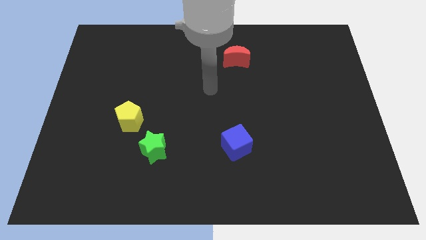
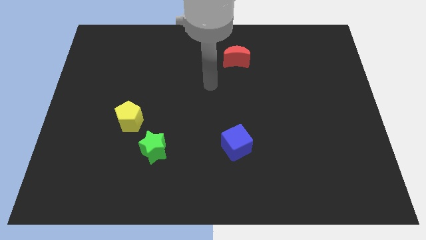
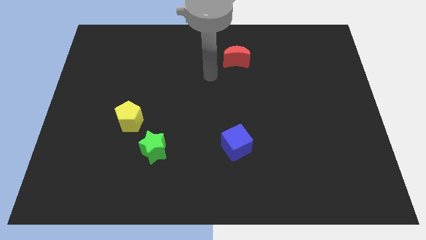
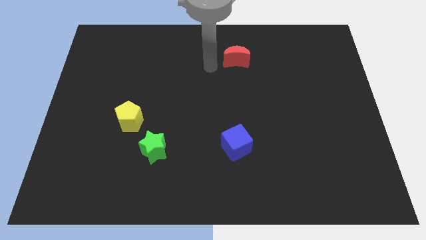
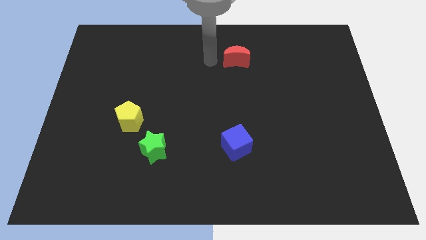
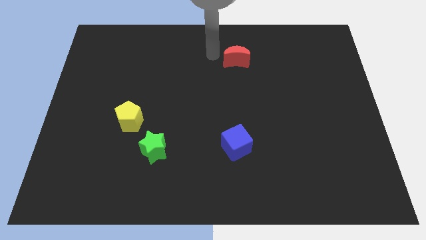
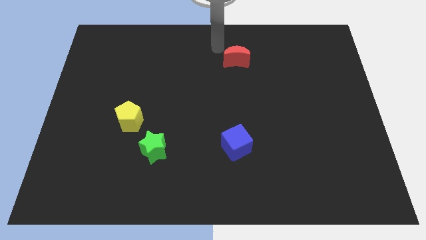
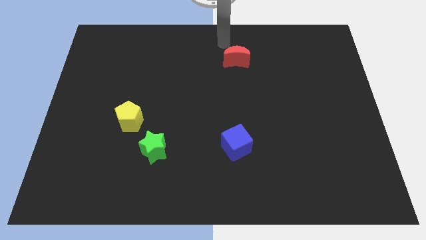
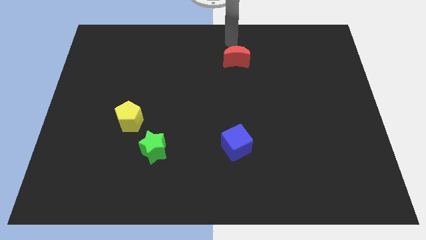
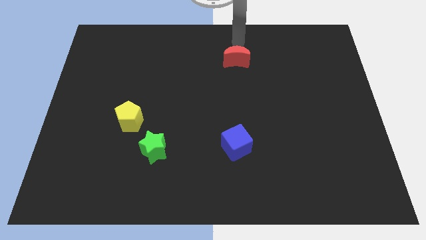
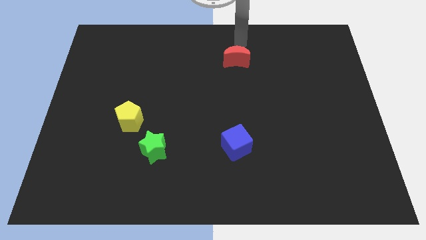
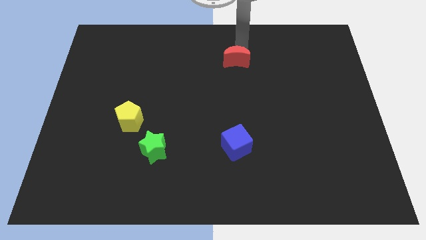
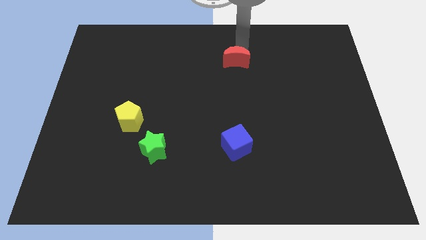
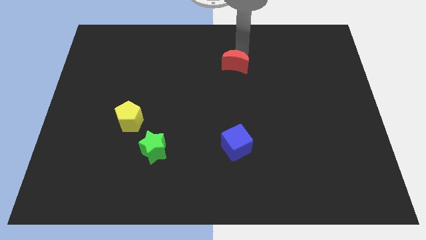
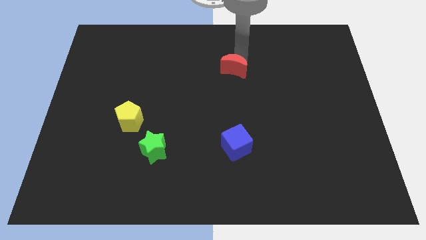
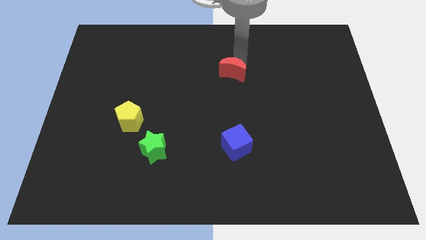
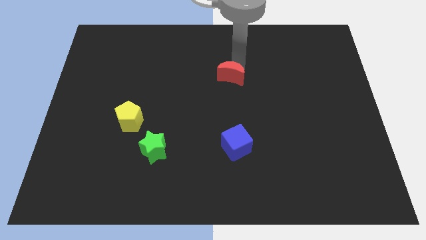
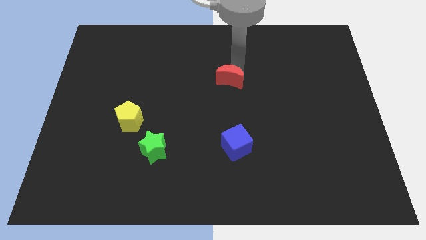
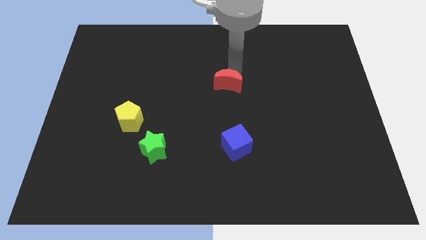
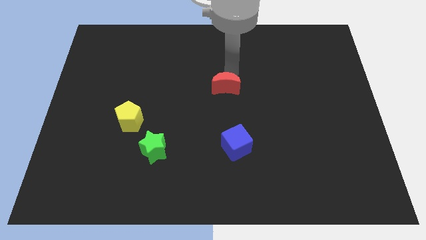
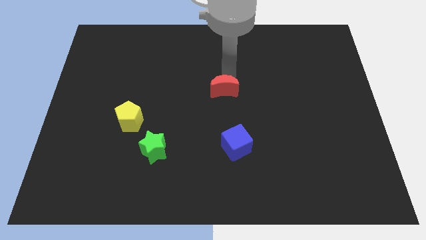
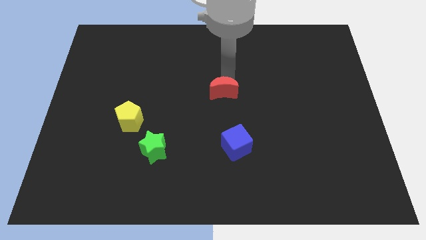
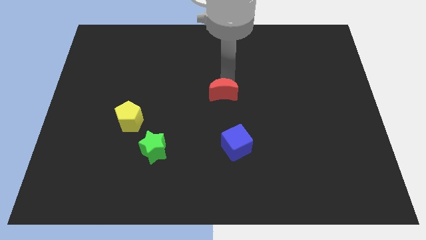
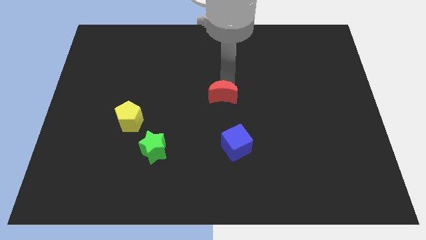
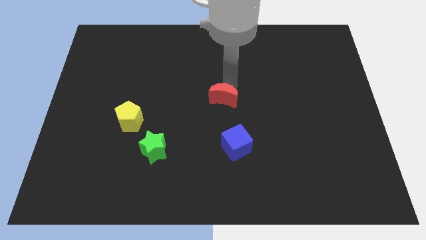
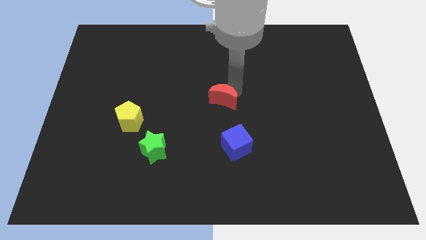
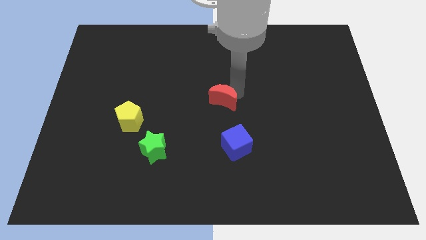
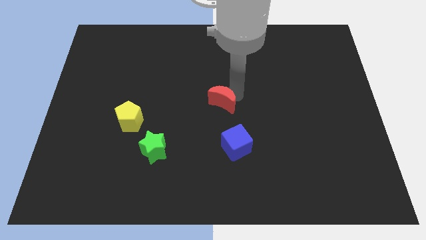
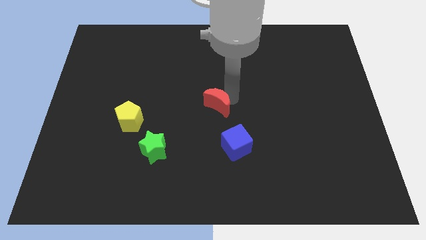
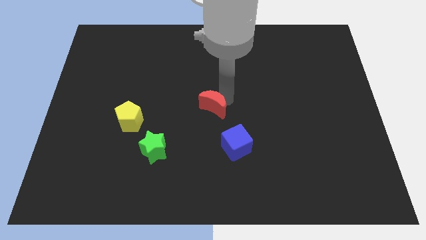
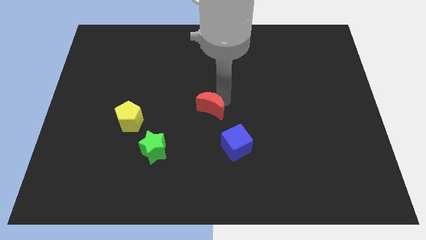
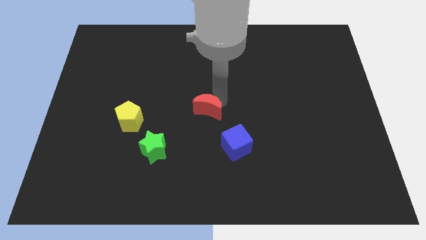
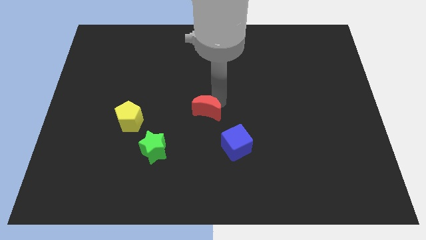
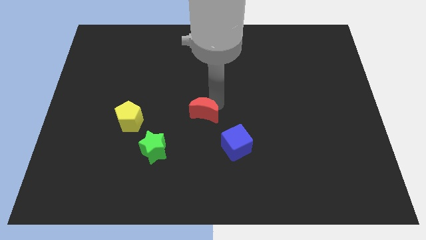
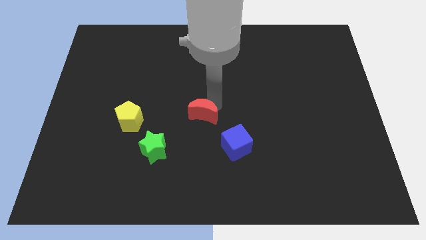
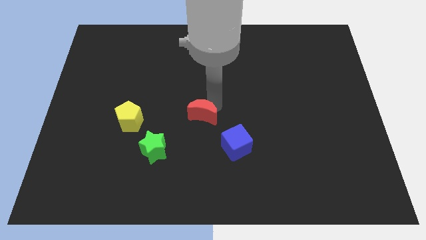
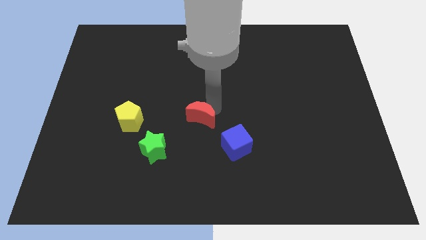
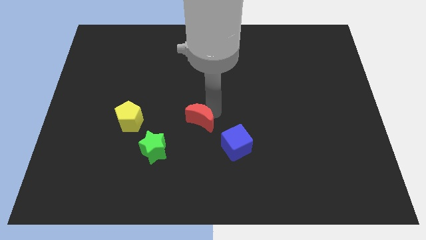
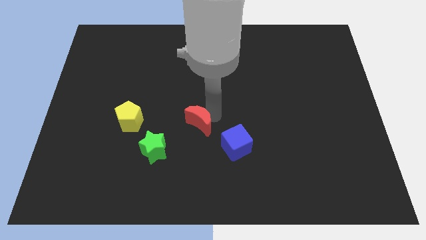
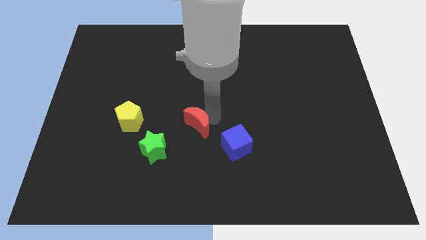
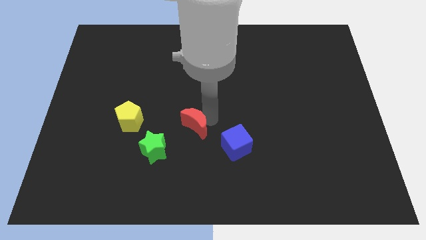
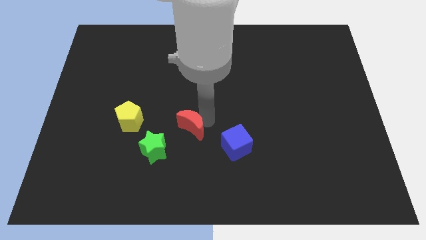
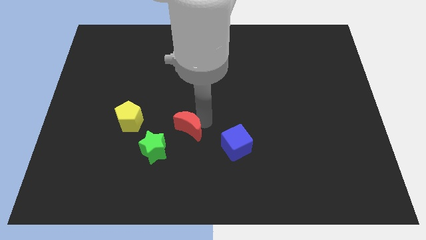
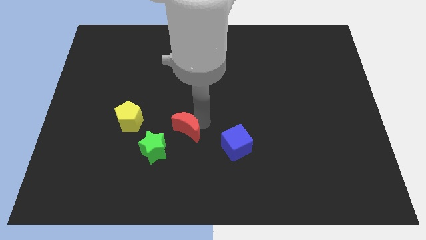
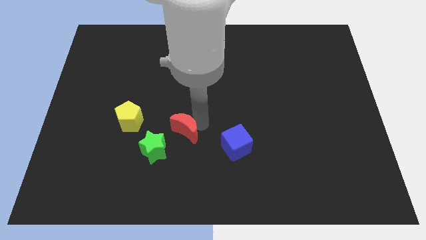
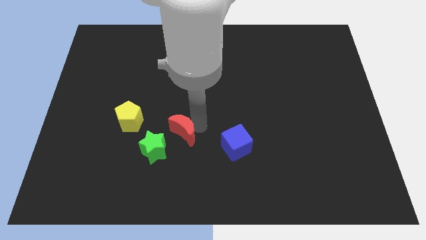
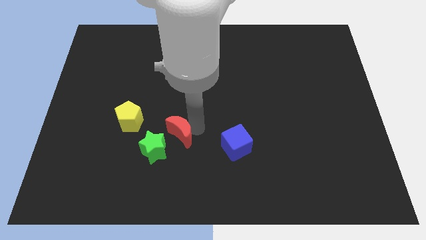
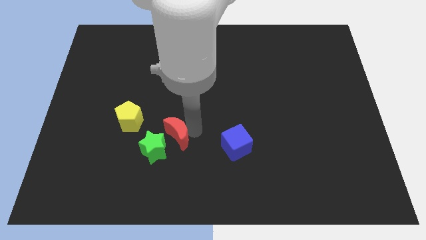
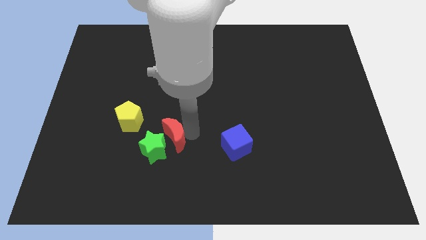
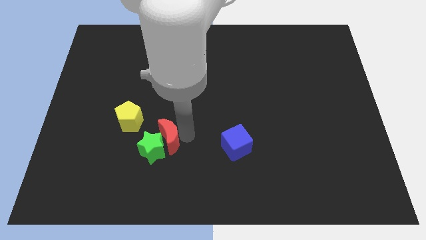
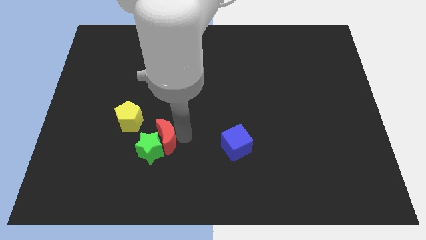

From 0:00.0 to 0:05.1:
slide the moon next to the green star

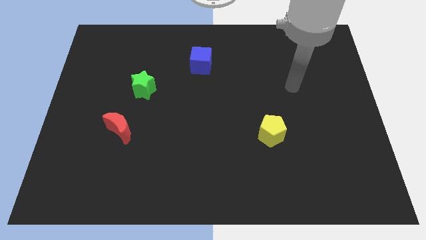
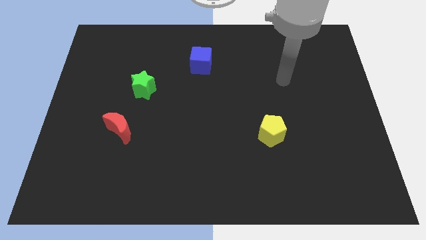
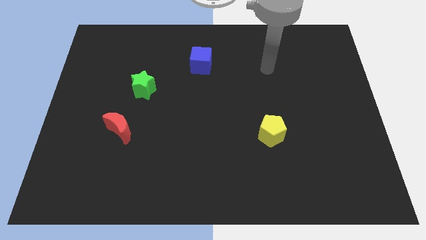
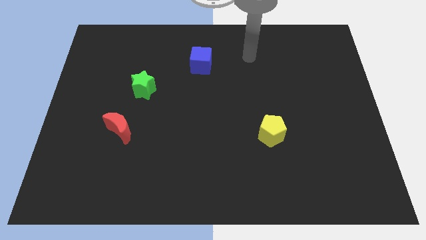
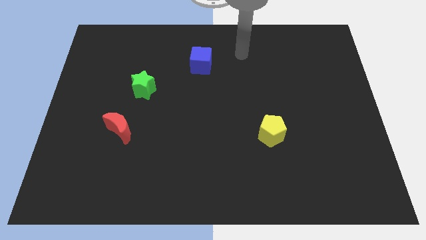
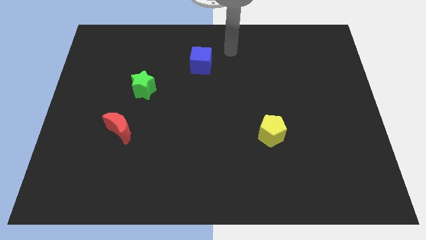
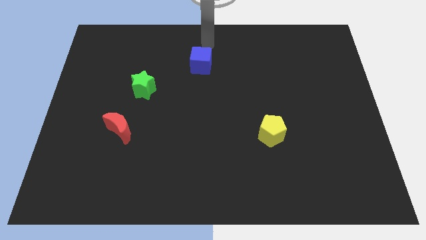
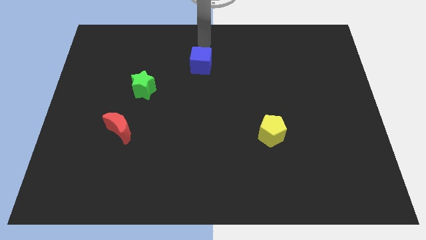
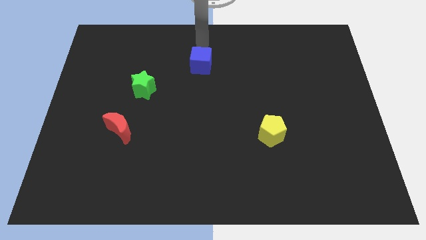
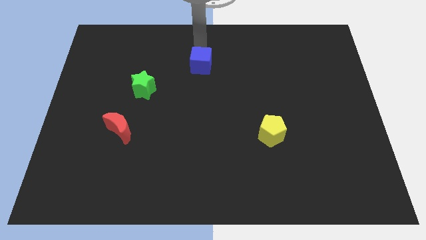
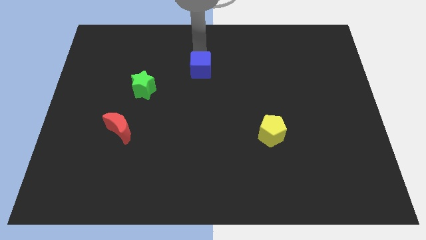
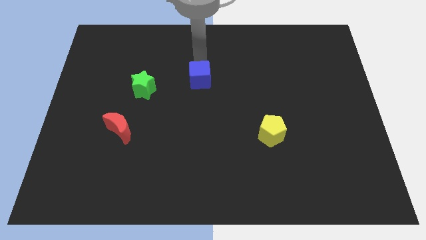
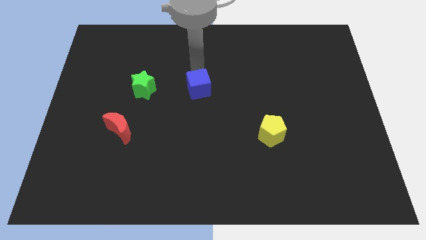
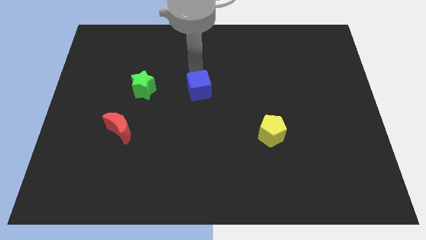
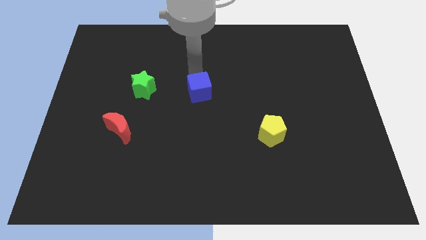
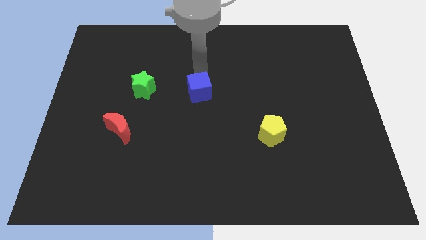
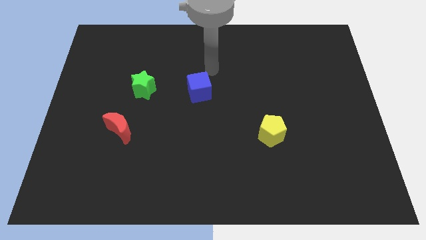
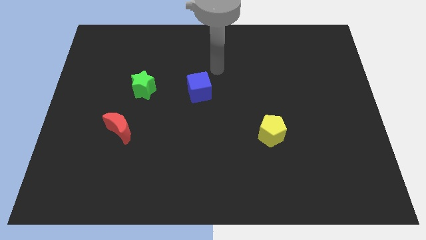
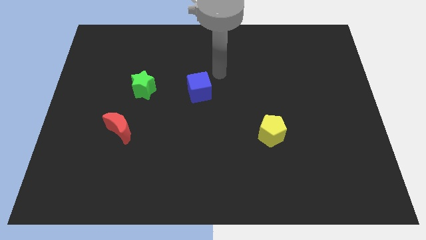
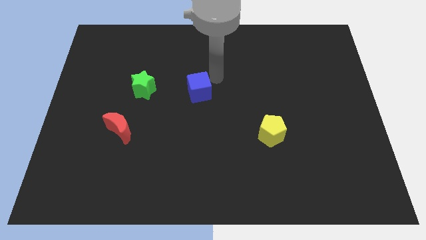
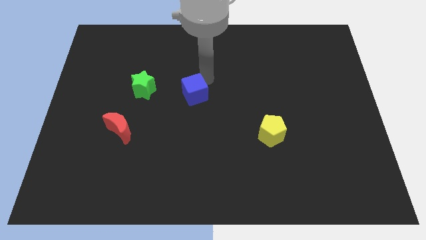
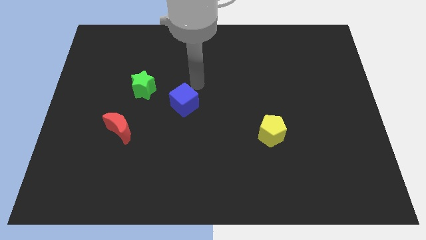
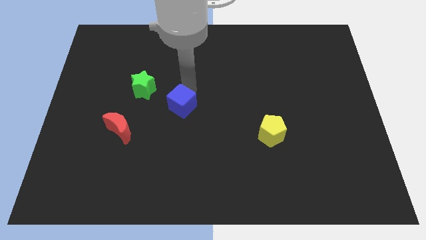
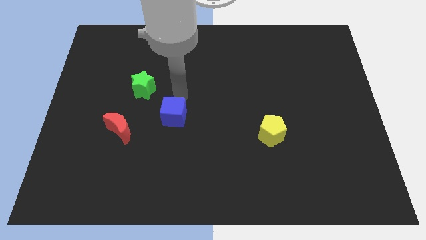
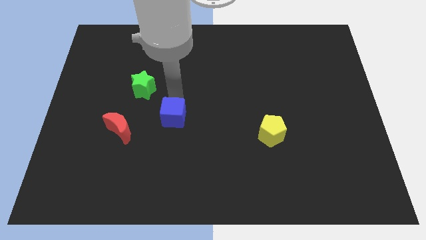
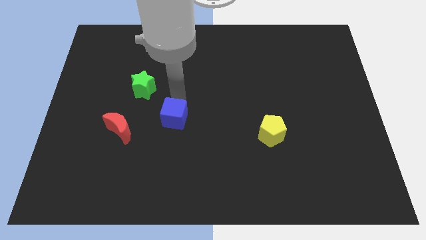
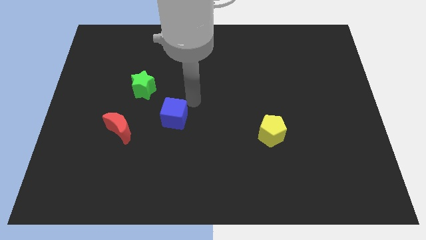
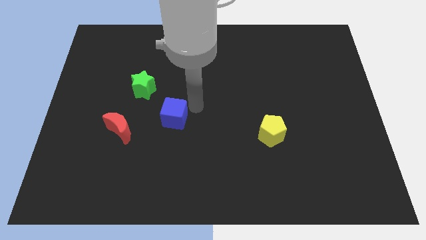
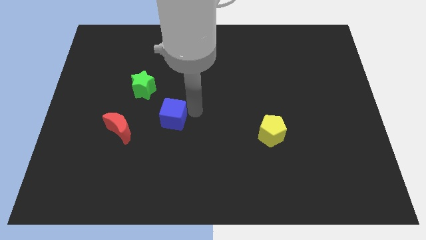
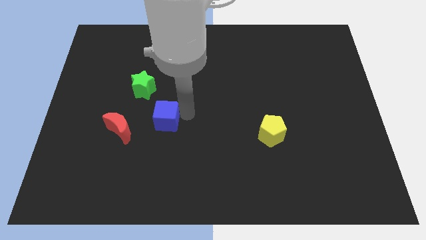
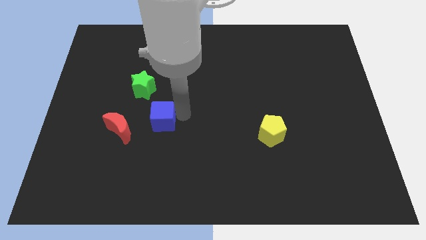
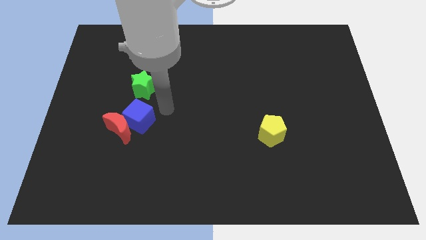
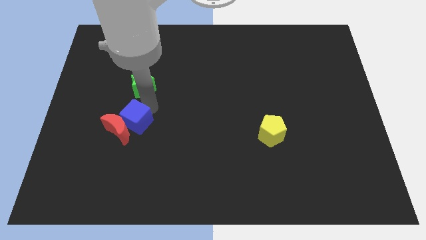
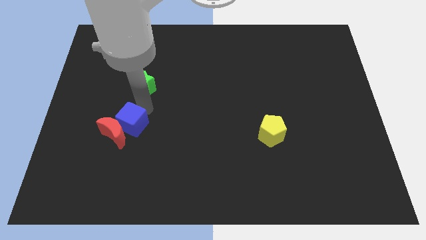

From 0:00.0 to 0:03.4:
slide the blue block close to the moon

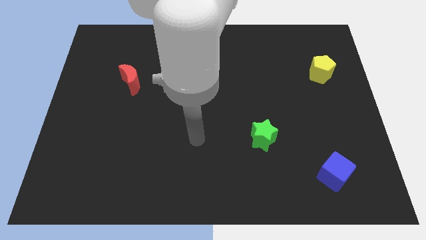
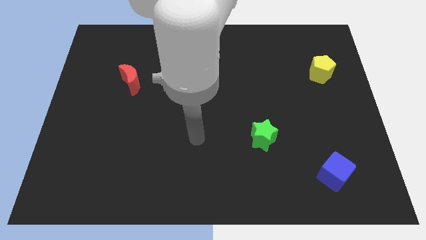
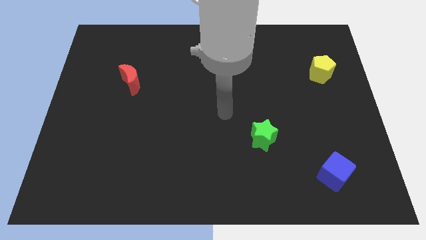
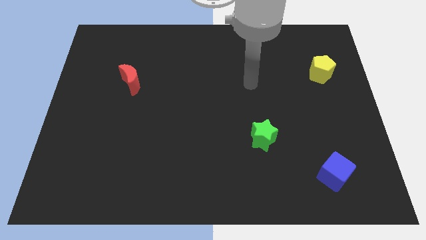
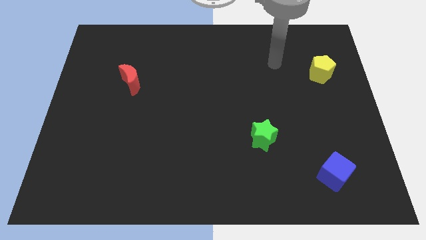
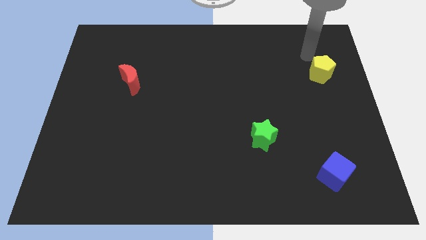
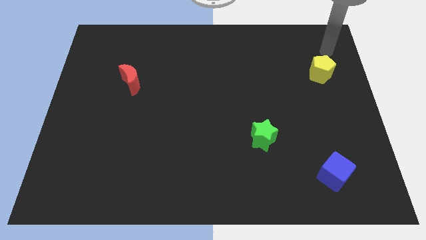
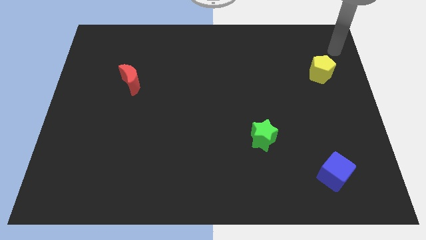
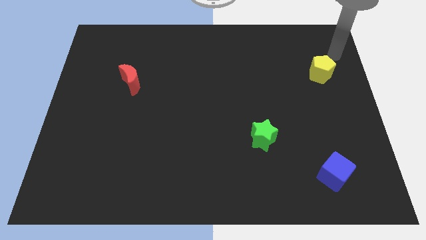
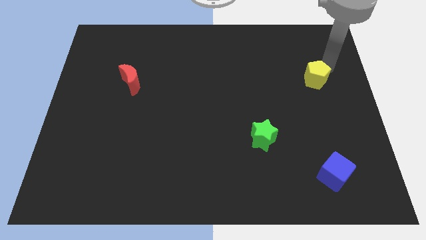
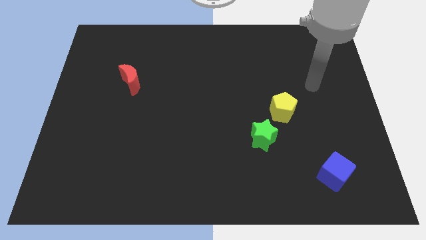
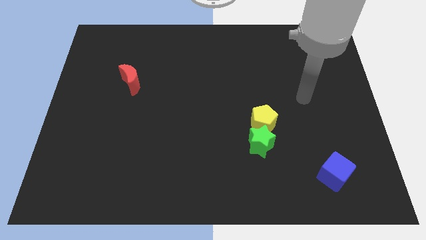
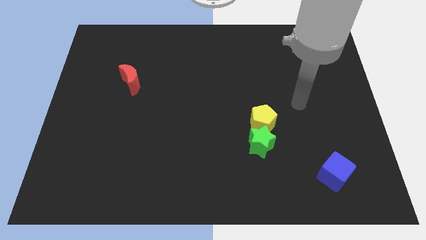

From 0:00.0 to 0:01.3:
push the yellow pentagon close to the green block
